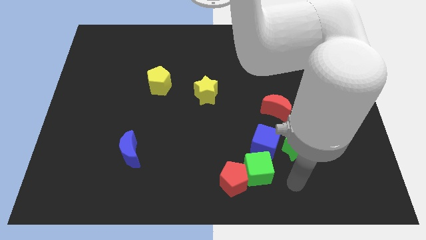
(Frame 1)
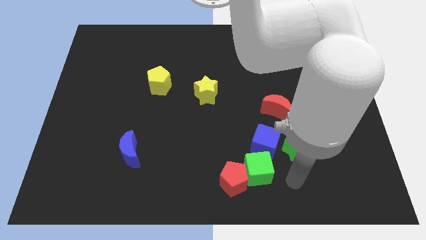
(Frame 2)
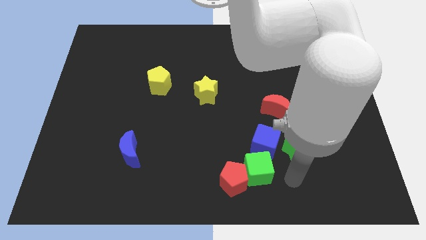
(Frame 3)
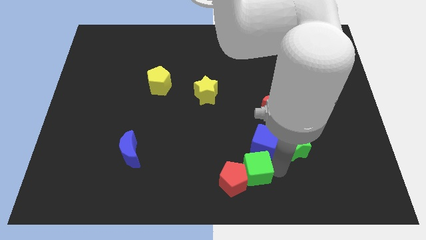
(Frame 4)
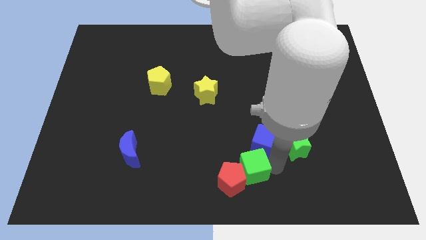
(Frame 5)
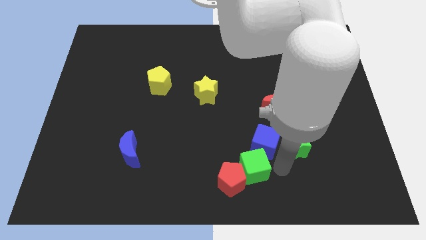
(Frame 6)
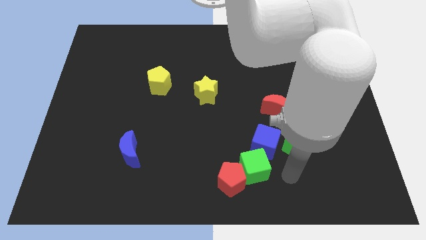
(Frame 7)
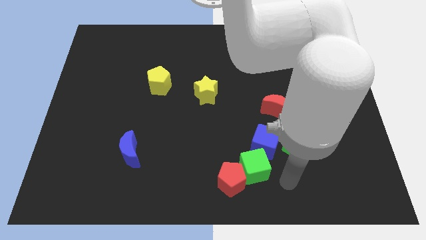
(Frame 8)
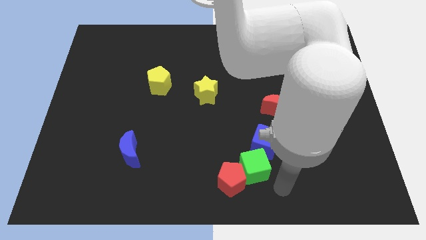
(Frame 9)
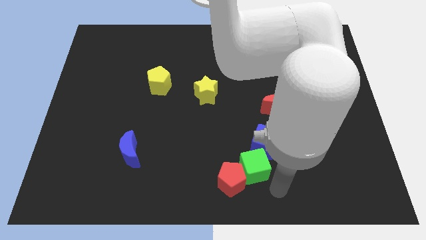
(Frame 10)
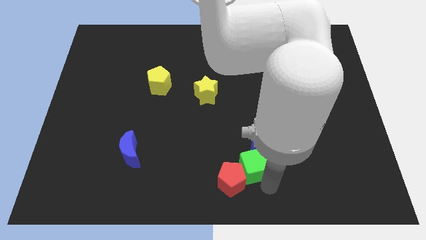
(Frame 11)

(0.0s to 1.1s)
move green cube slightly

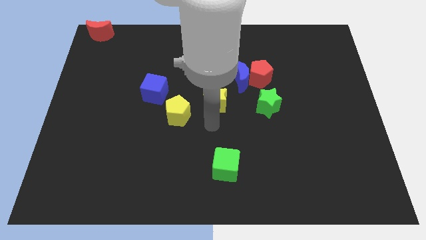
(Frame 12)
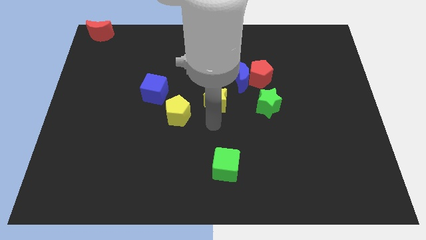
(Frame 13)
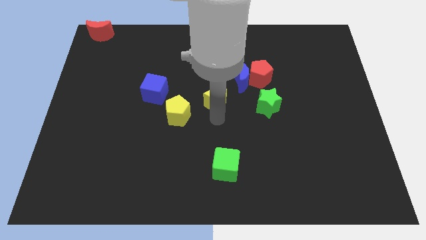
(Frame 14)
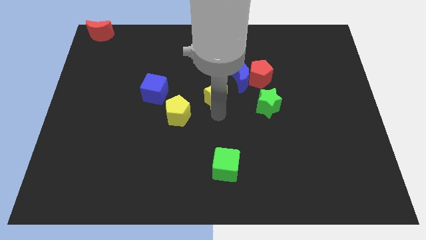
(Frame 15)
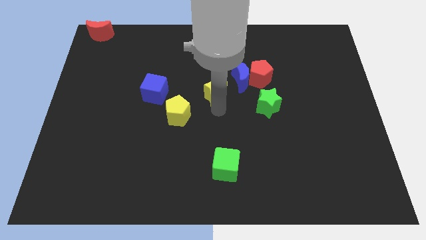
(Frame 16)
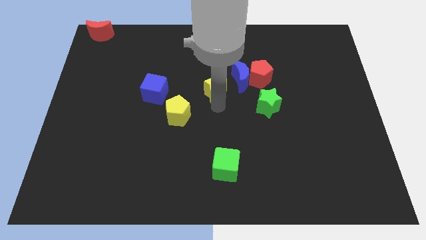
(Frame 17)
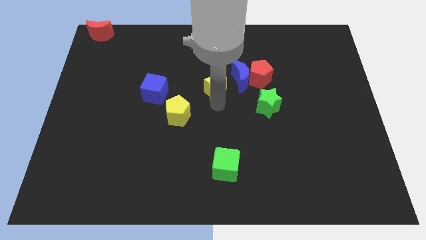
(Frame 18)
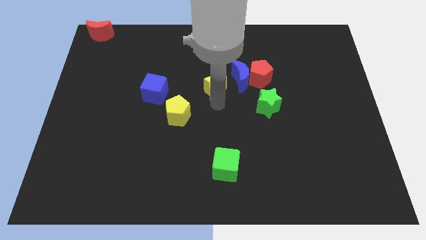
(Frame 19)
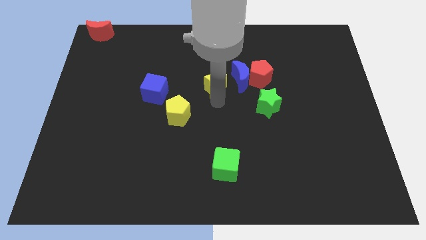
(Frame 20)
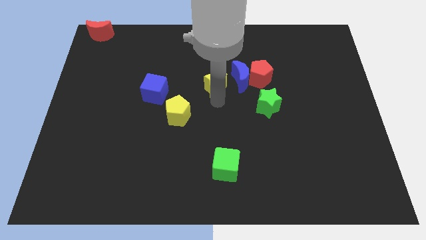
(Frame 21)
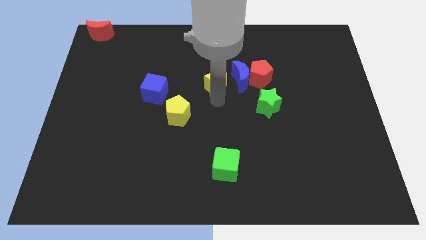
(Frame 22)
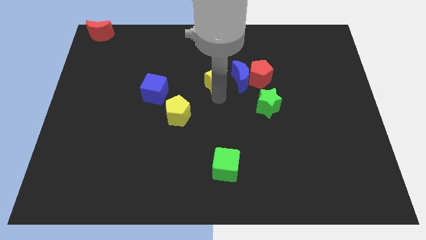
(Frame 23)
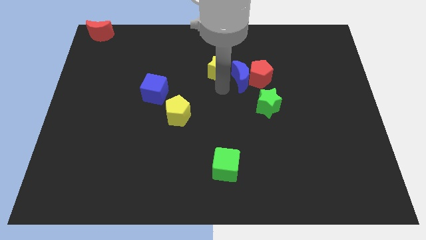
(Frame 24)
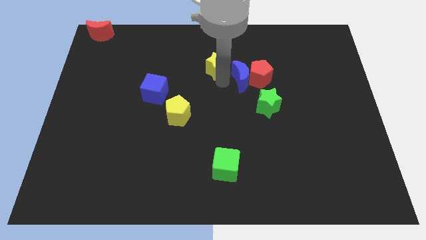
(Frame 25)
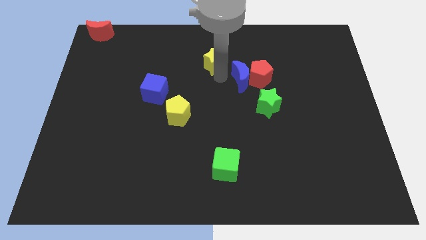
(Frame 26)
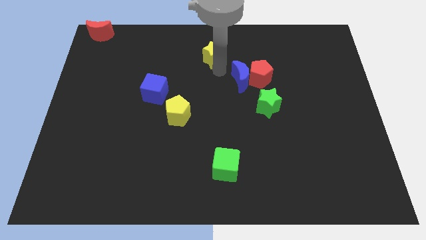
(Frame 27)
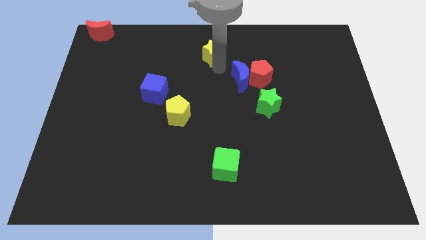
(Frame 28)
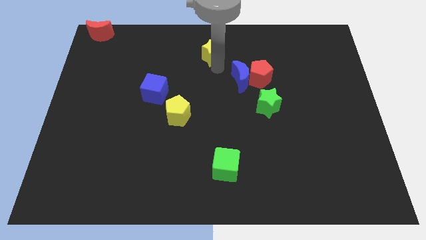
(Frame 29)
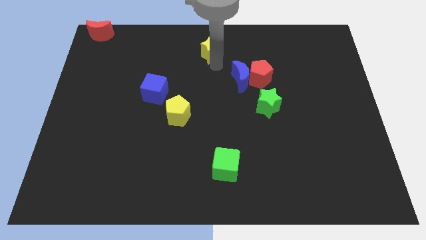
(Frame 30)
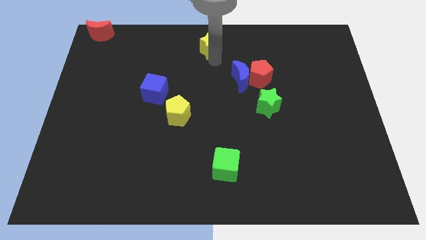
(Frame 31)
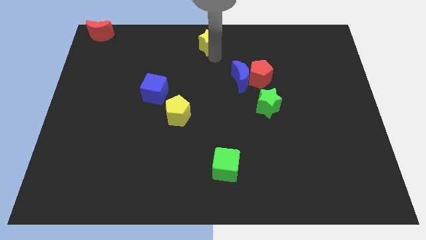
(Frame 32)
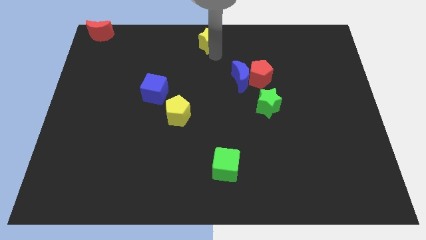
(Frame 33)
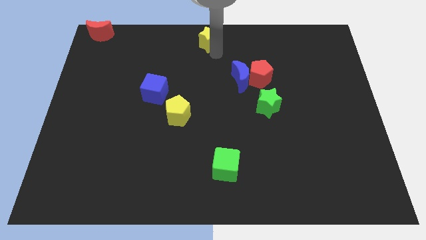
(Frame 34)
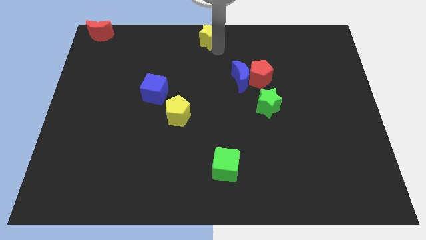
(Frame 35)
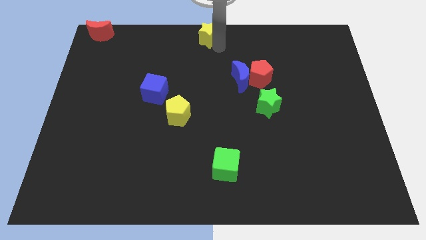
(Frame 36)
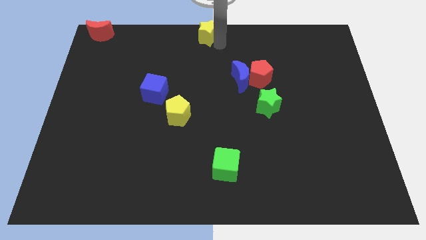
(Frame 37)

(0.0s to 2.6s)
move the yellow star to the top center of the board

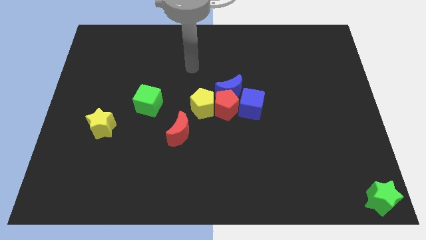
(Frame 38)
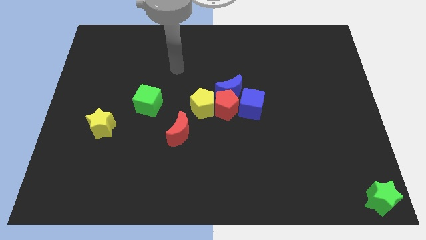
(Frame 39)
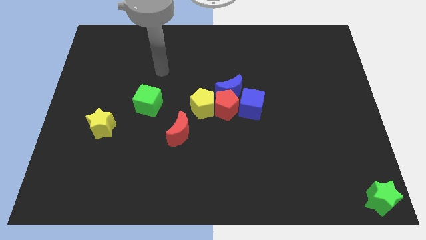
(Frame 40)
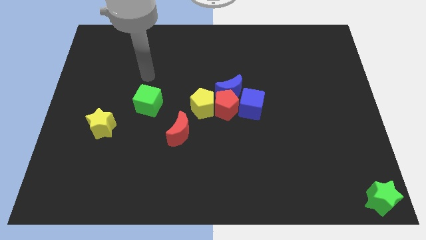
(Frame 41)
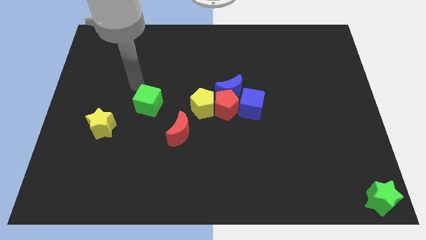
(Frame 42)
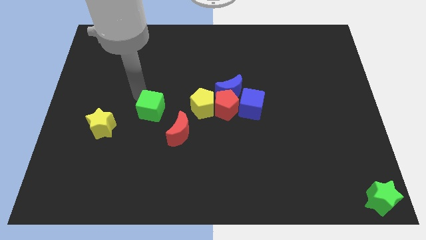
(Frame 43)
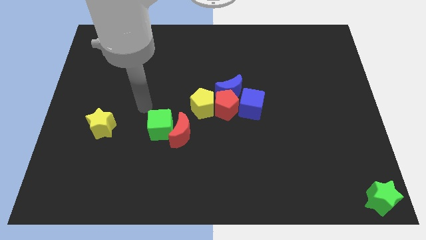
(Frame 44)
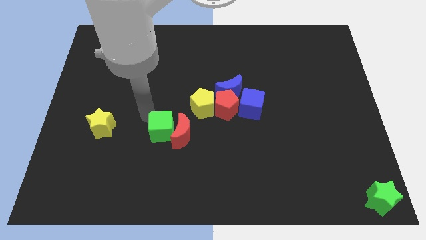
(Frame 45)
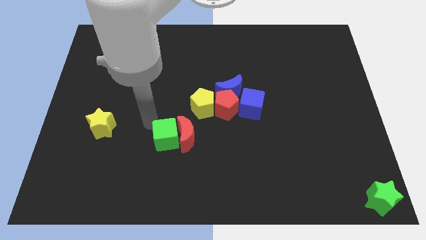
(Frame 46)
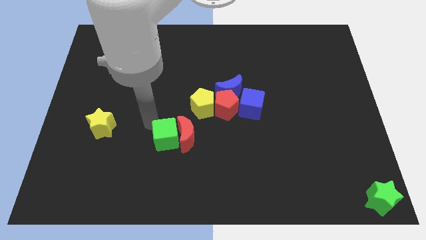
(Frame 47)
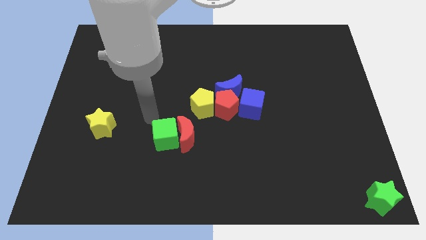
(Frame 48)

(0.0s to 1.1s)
push the green cube into the red moon

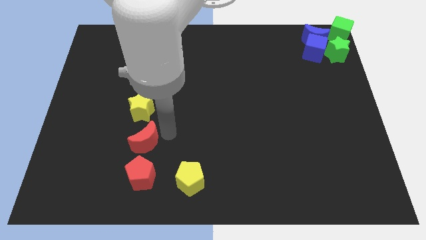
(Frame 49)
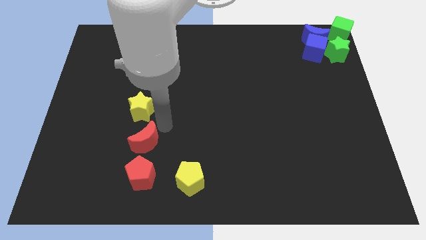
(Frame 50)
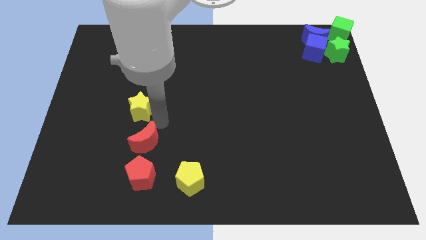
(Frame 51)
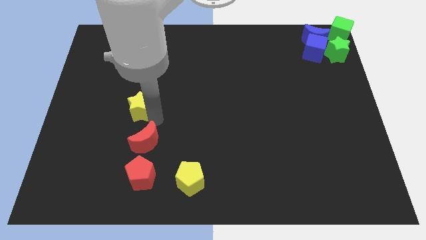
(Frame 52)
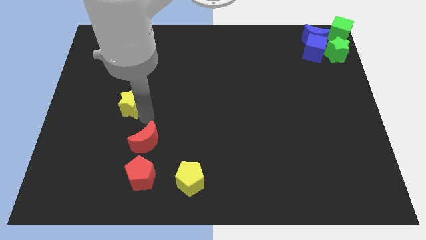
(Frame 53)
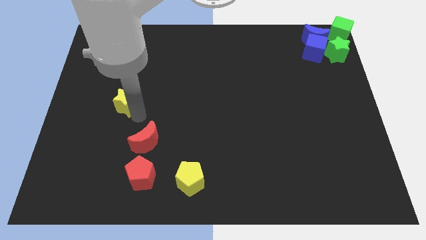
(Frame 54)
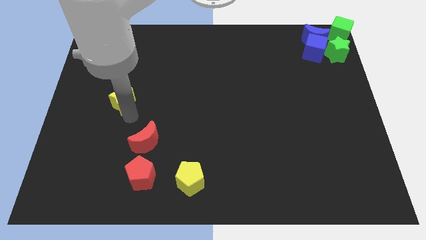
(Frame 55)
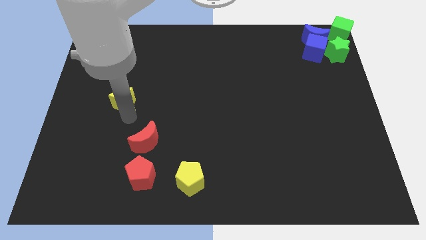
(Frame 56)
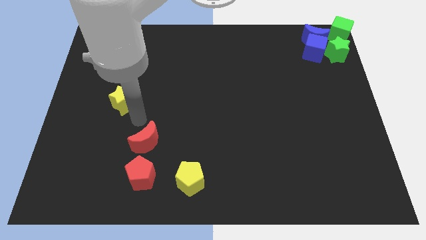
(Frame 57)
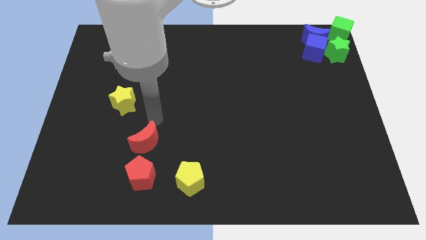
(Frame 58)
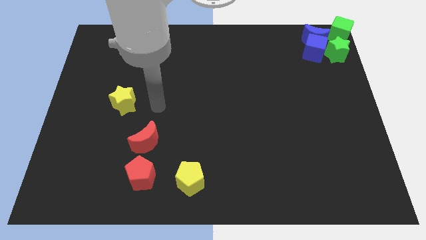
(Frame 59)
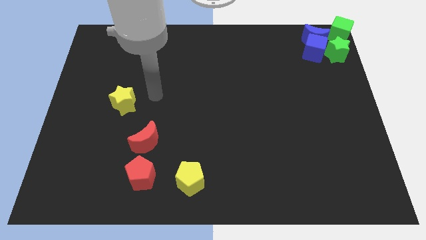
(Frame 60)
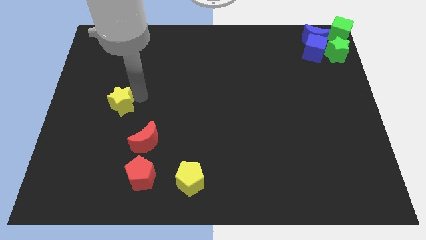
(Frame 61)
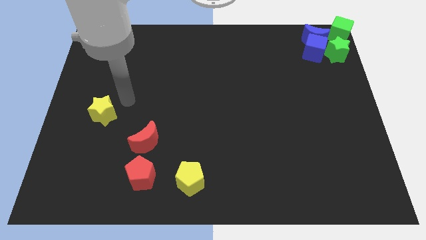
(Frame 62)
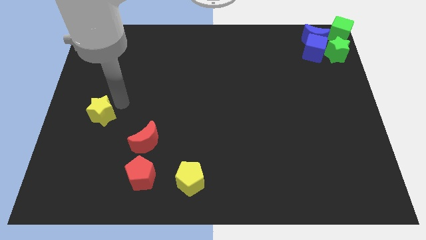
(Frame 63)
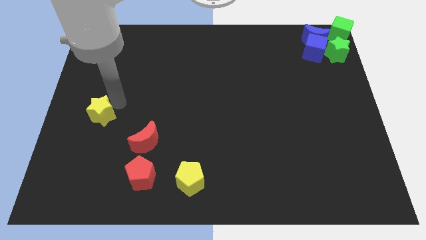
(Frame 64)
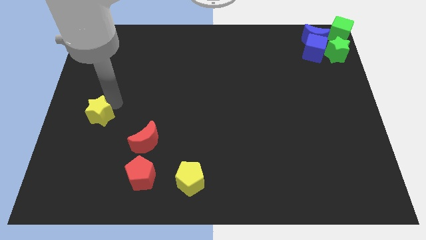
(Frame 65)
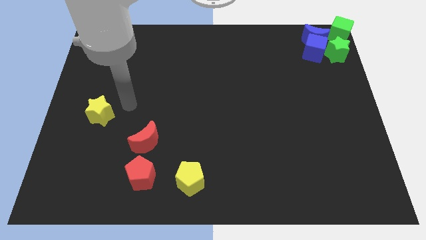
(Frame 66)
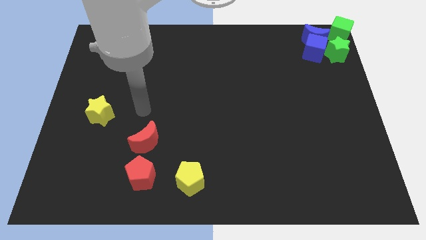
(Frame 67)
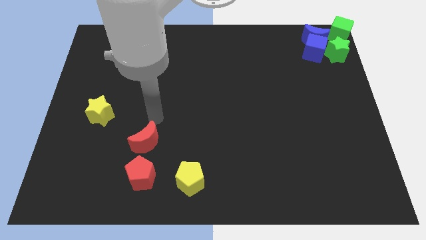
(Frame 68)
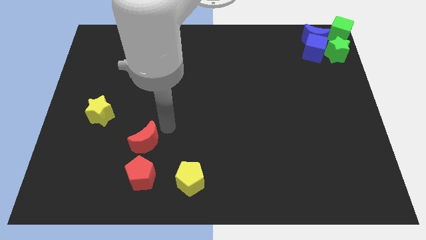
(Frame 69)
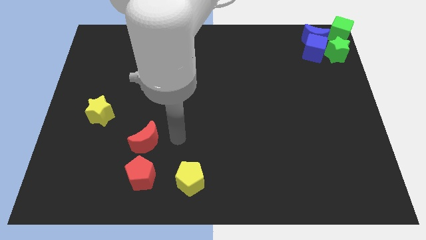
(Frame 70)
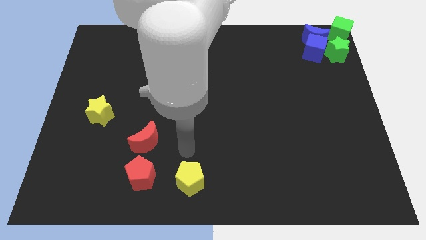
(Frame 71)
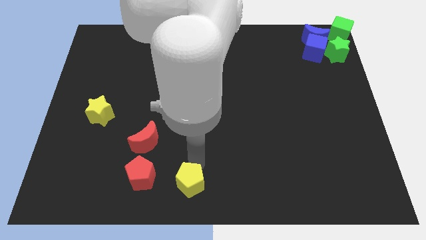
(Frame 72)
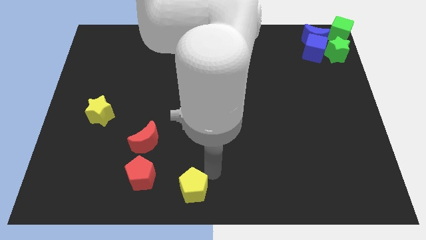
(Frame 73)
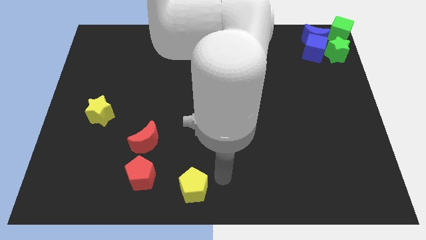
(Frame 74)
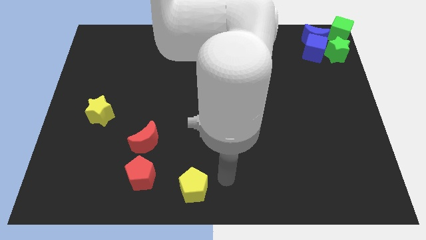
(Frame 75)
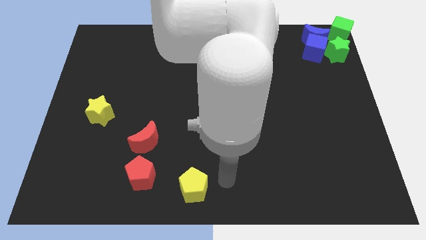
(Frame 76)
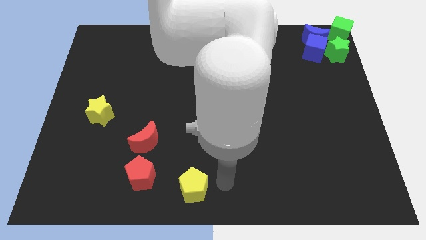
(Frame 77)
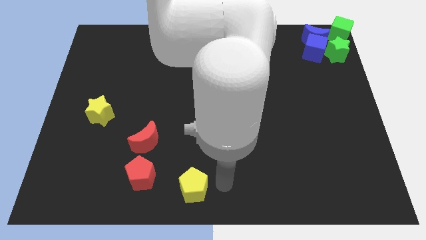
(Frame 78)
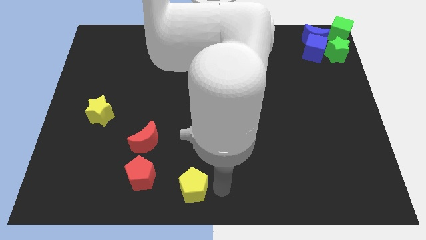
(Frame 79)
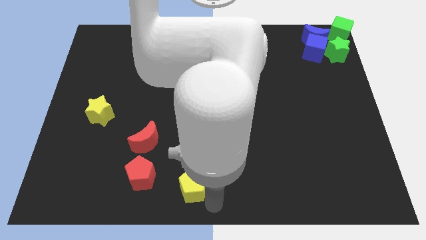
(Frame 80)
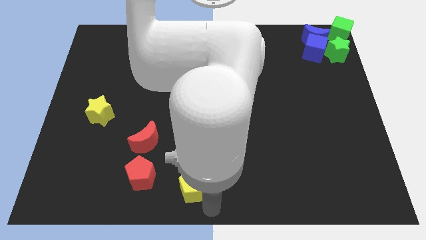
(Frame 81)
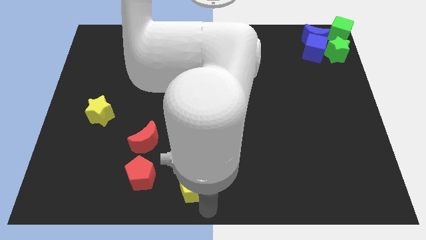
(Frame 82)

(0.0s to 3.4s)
adjust yellow blocks towards the red blocks

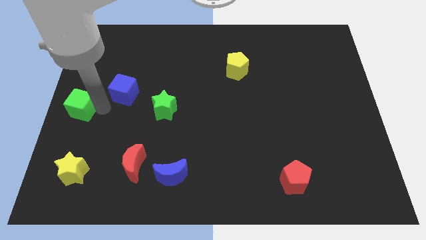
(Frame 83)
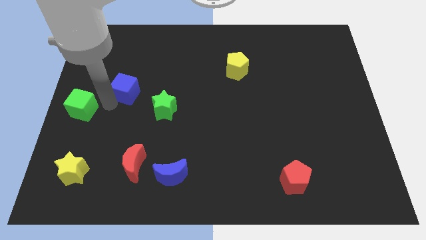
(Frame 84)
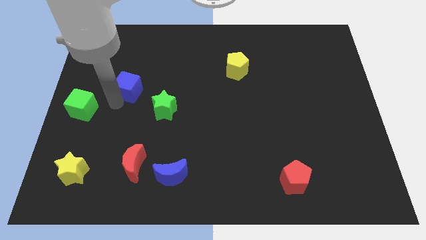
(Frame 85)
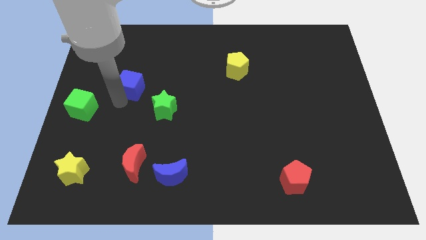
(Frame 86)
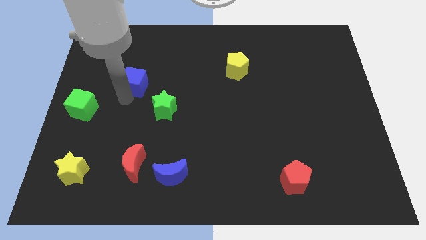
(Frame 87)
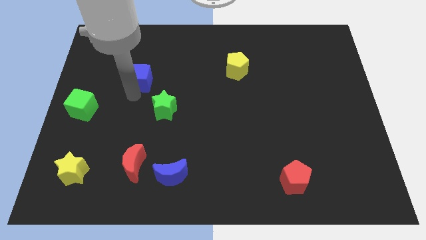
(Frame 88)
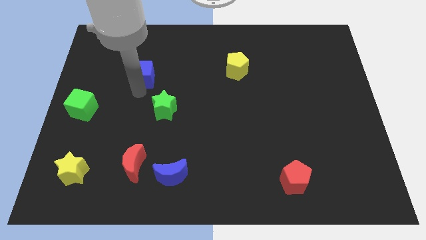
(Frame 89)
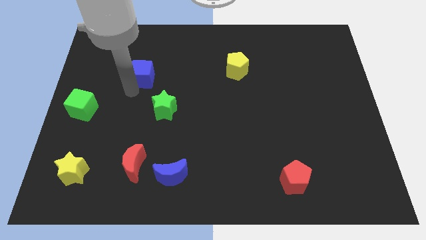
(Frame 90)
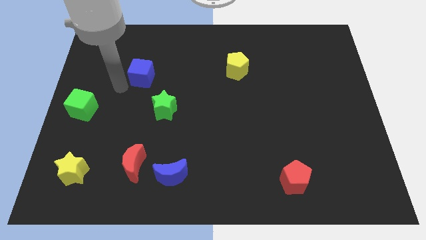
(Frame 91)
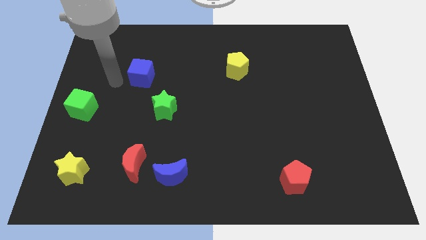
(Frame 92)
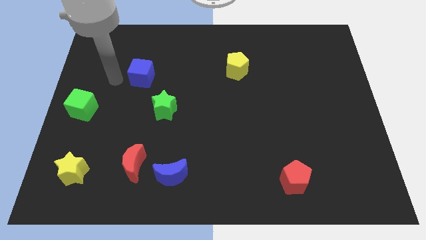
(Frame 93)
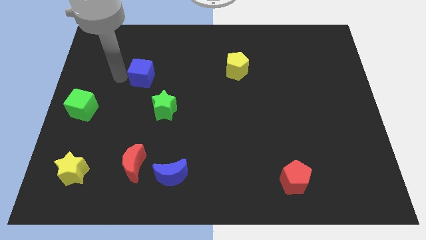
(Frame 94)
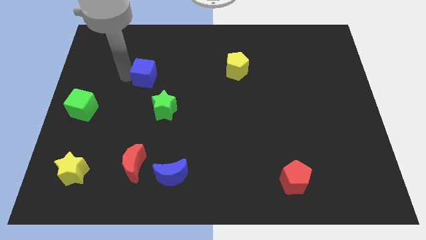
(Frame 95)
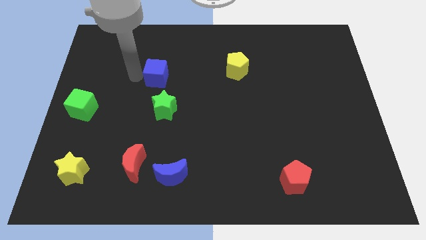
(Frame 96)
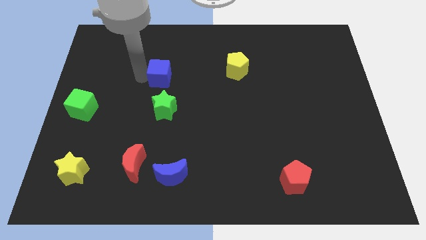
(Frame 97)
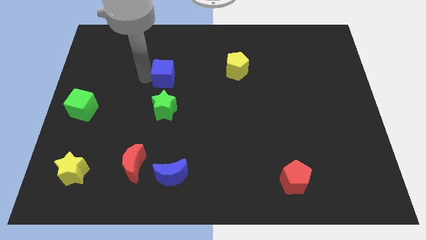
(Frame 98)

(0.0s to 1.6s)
move the blue cube above the green star
